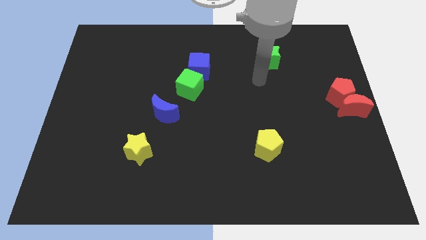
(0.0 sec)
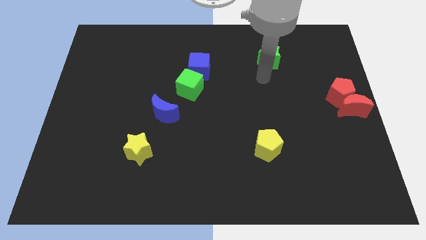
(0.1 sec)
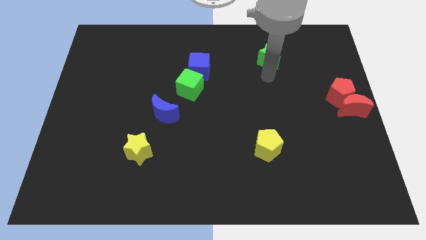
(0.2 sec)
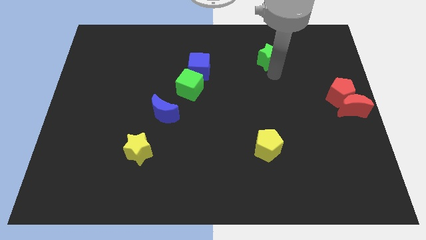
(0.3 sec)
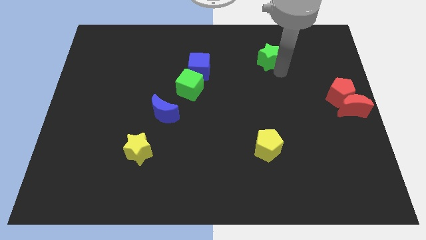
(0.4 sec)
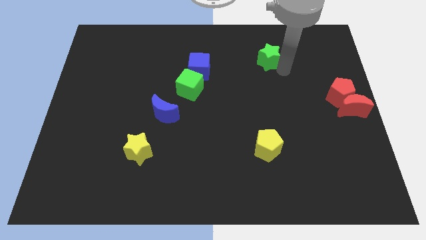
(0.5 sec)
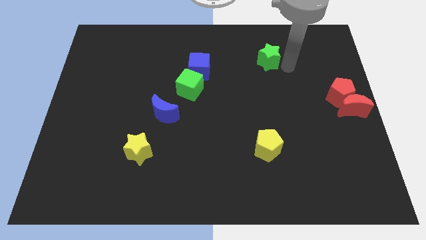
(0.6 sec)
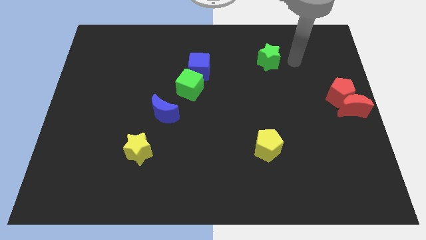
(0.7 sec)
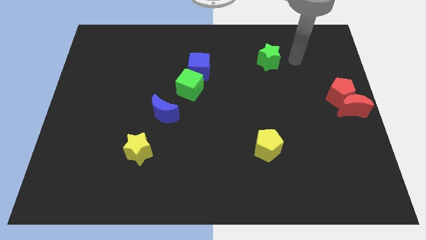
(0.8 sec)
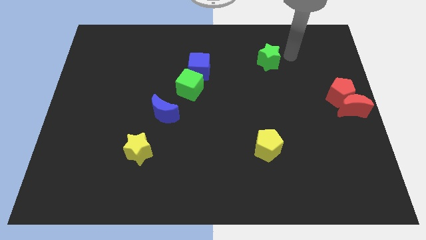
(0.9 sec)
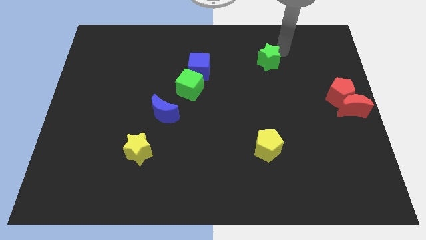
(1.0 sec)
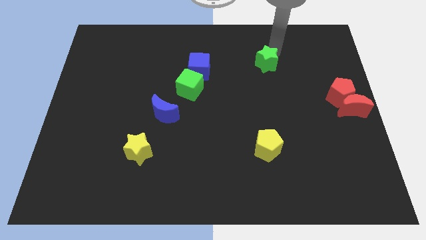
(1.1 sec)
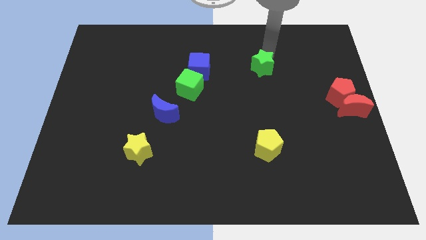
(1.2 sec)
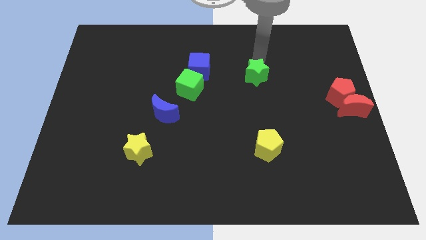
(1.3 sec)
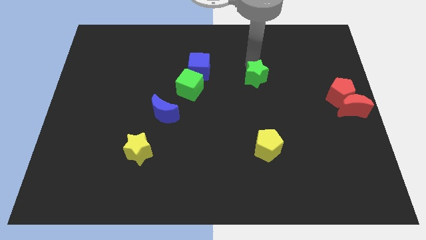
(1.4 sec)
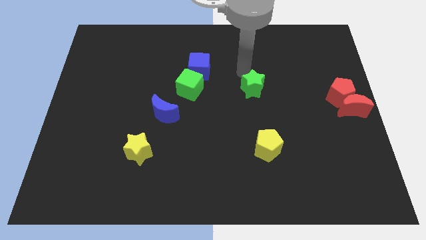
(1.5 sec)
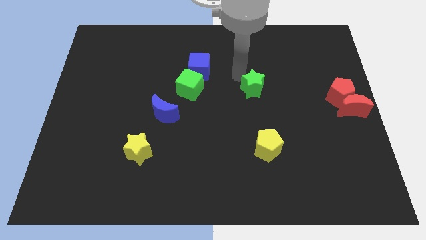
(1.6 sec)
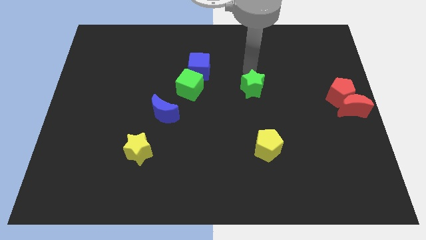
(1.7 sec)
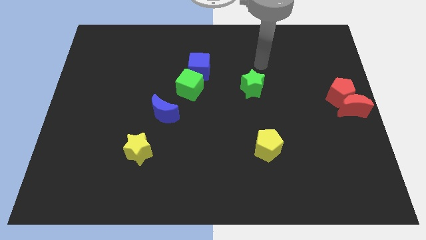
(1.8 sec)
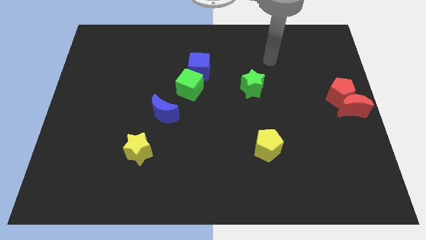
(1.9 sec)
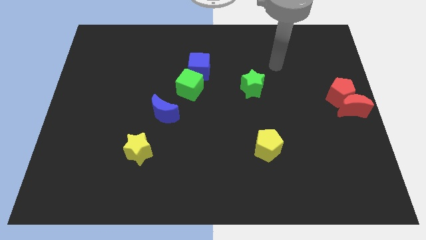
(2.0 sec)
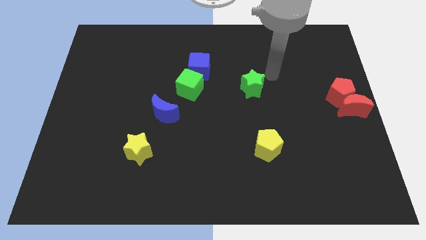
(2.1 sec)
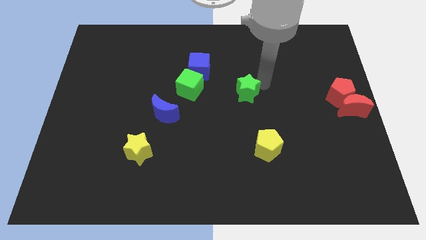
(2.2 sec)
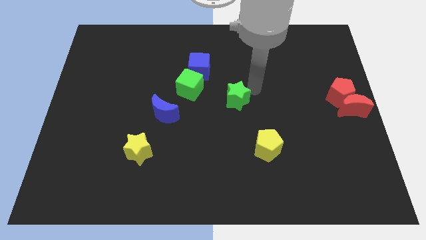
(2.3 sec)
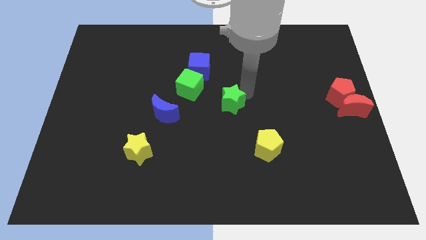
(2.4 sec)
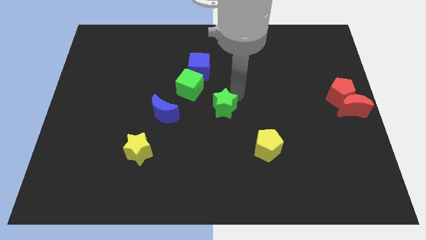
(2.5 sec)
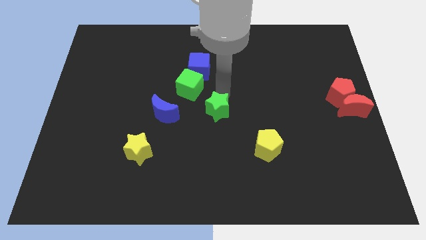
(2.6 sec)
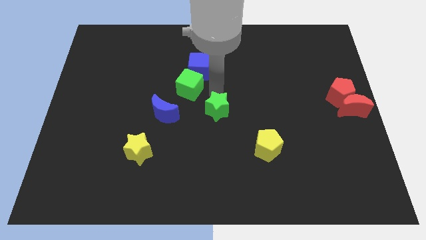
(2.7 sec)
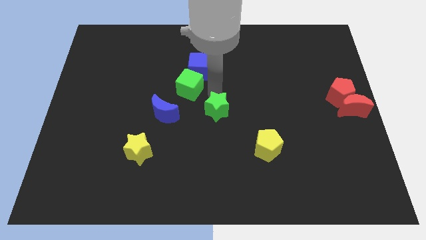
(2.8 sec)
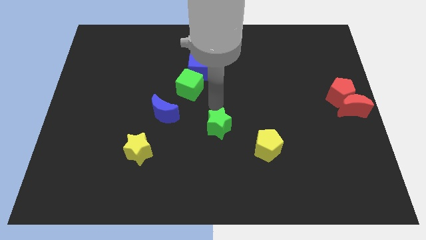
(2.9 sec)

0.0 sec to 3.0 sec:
push green star diagonally in between green cube and yellow pentagon

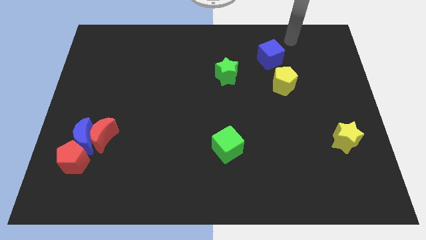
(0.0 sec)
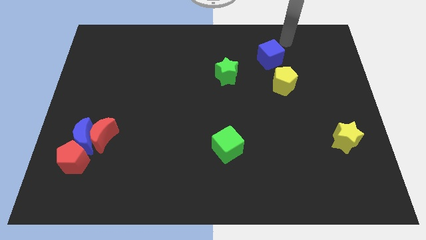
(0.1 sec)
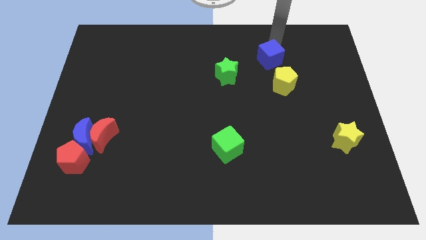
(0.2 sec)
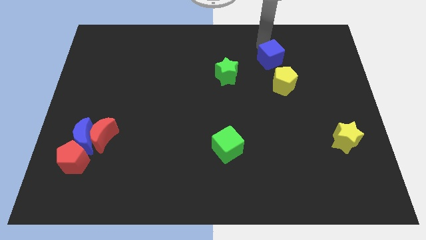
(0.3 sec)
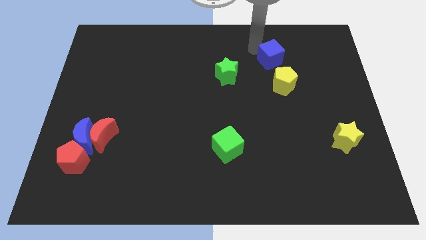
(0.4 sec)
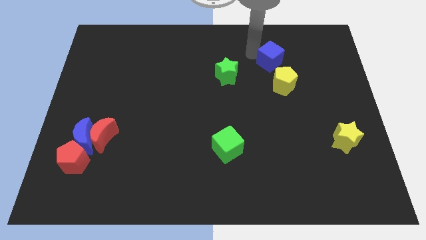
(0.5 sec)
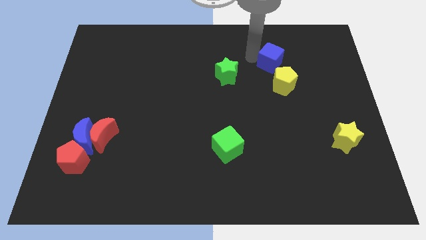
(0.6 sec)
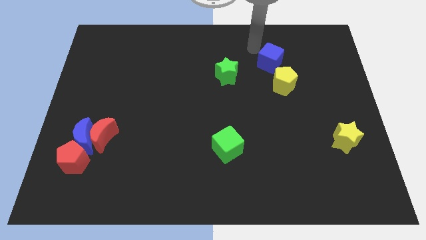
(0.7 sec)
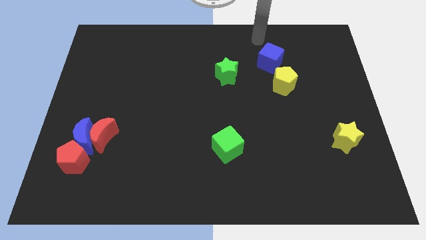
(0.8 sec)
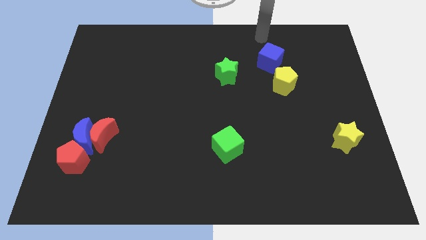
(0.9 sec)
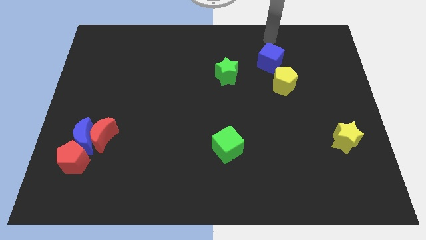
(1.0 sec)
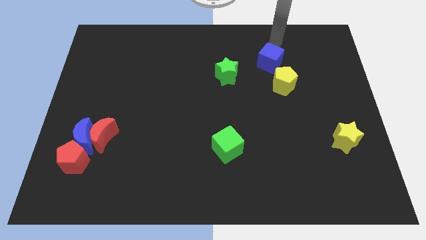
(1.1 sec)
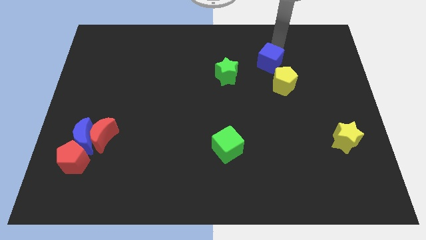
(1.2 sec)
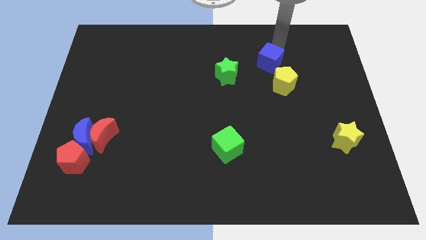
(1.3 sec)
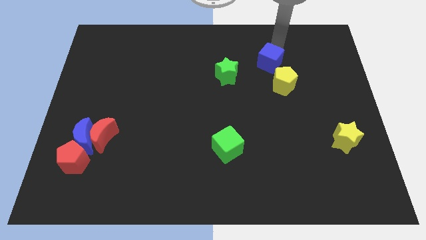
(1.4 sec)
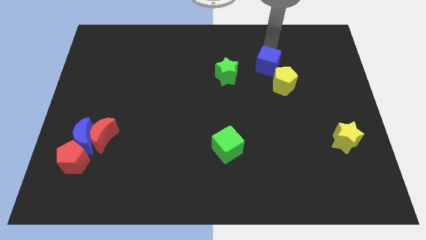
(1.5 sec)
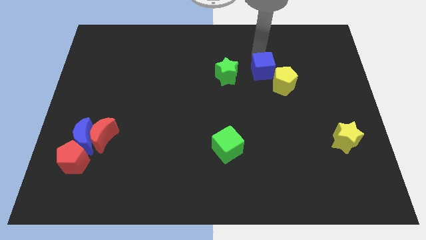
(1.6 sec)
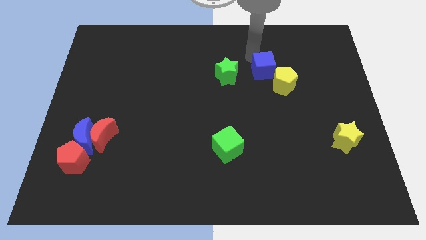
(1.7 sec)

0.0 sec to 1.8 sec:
move the blue cube to the top left side of the yellow pentagon

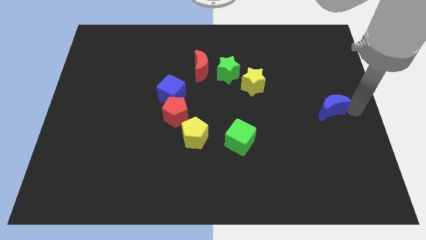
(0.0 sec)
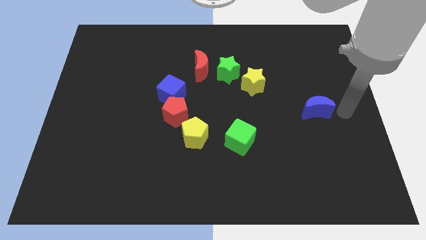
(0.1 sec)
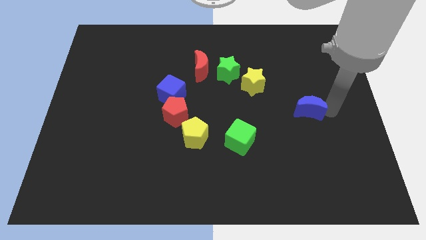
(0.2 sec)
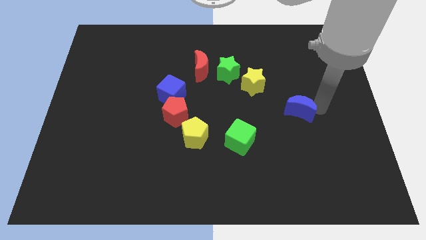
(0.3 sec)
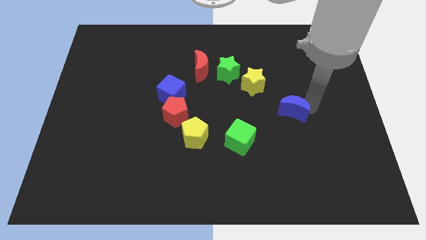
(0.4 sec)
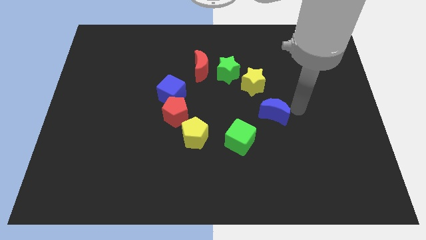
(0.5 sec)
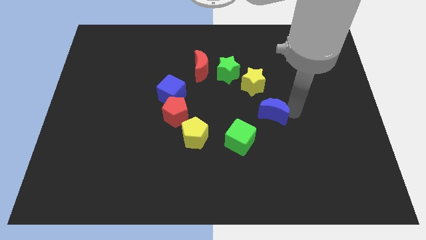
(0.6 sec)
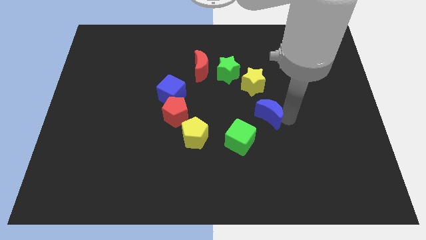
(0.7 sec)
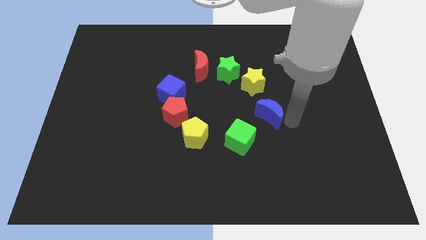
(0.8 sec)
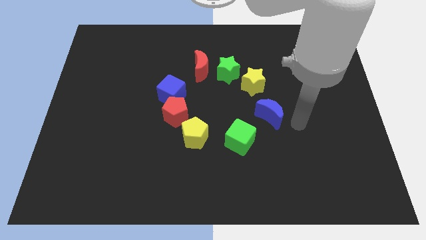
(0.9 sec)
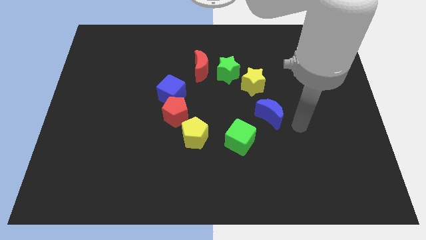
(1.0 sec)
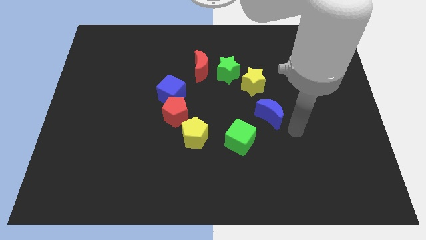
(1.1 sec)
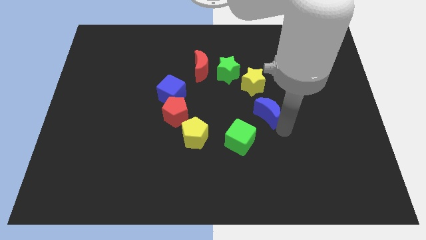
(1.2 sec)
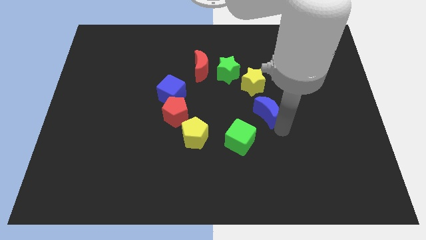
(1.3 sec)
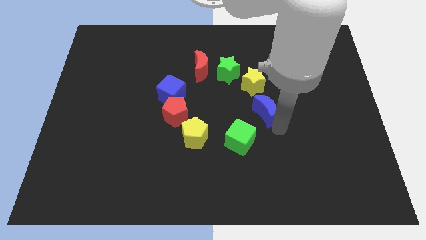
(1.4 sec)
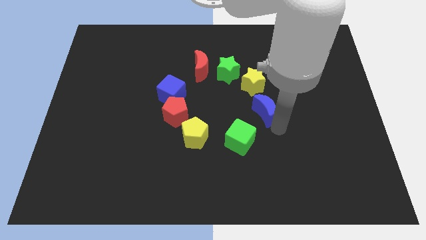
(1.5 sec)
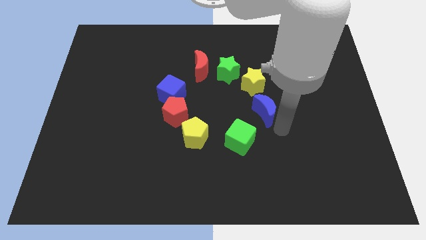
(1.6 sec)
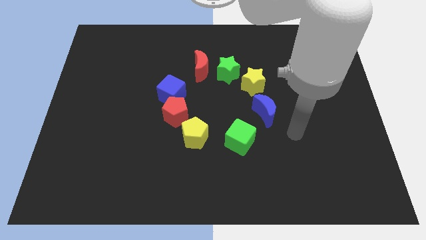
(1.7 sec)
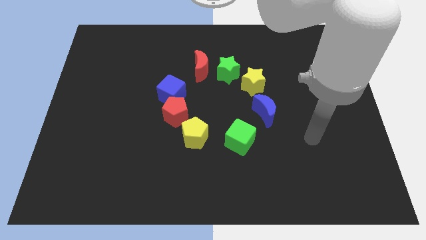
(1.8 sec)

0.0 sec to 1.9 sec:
slide the blue moon close to the yellow star

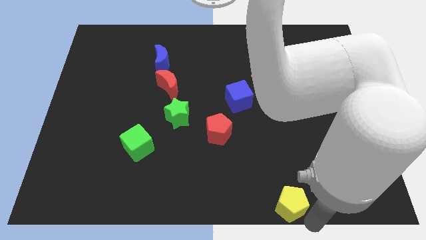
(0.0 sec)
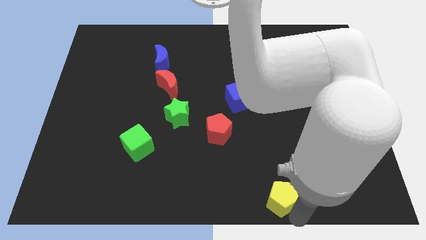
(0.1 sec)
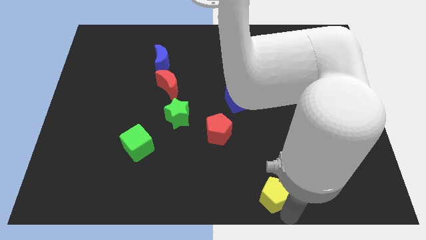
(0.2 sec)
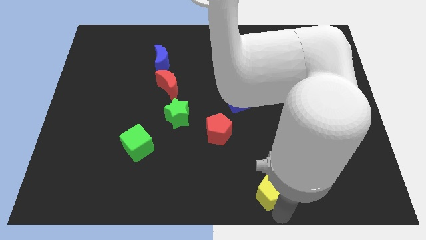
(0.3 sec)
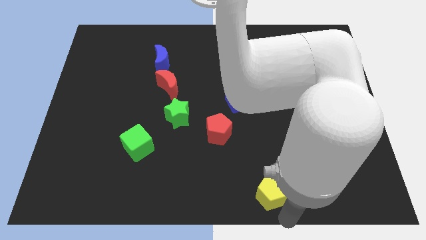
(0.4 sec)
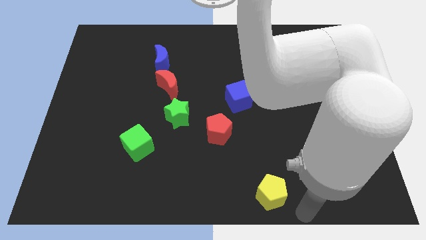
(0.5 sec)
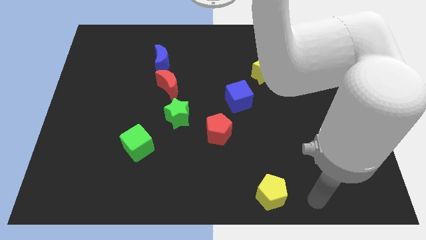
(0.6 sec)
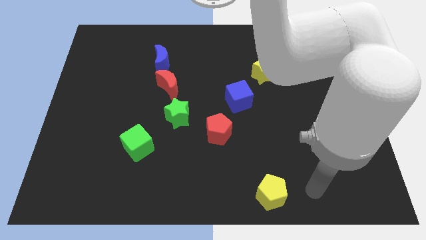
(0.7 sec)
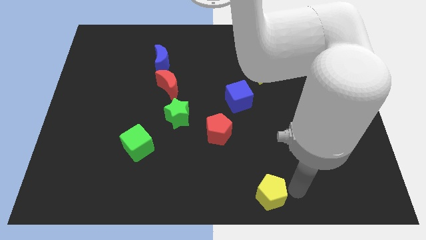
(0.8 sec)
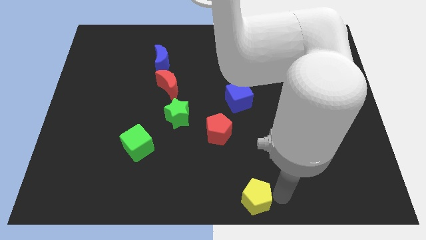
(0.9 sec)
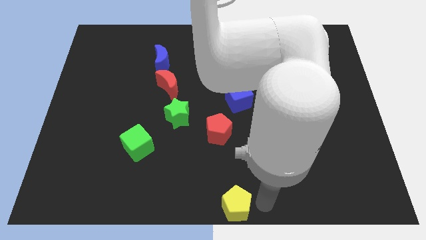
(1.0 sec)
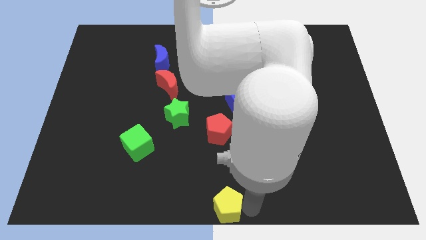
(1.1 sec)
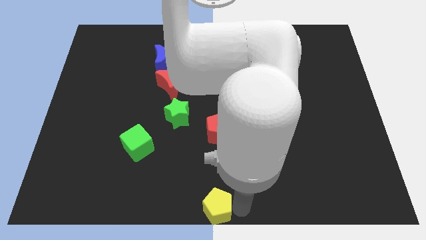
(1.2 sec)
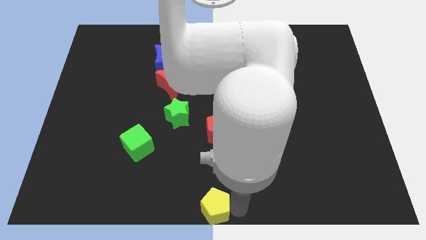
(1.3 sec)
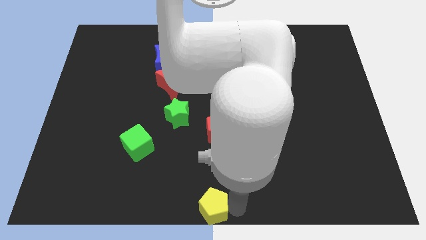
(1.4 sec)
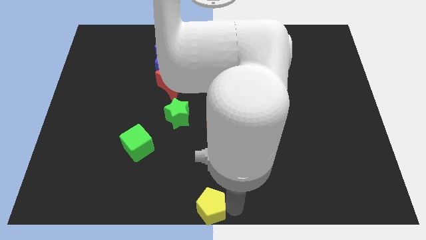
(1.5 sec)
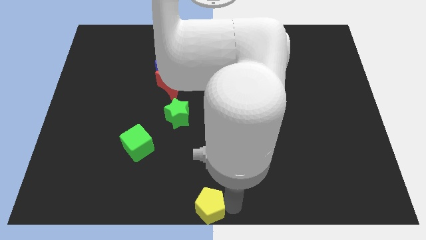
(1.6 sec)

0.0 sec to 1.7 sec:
move the yellow pentagon to the bottom center

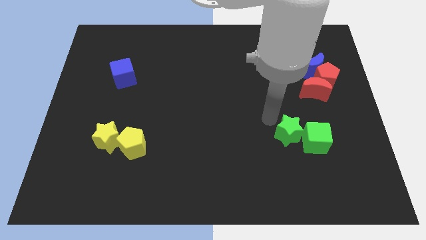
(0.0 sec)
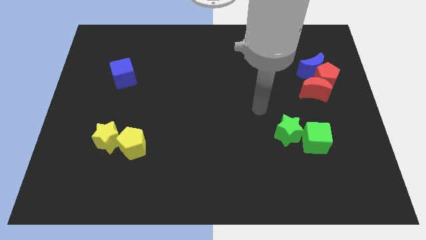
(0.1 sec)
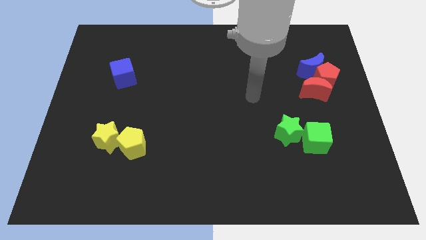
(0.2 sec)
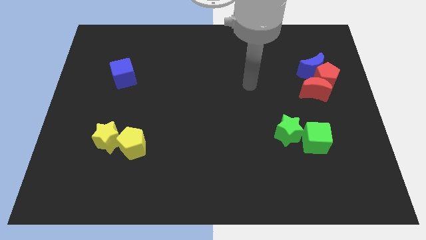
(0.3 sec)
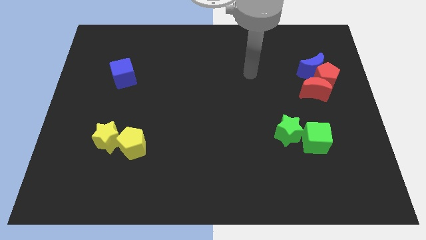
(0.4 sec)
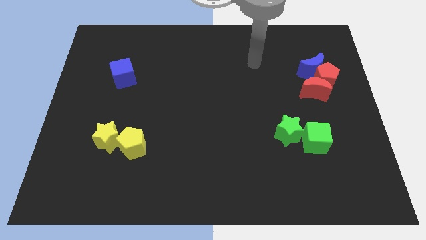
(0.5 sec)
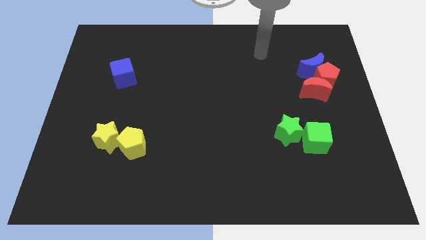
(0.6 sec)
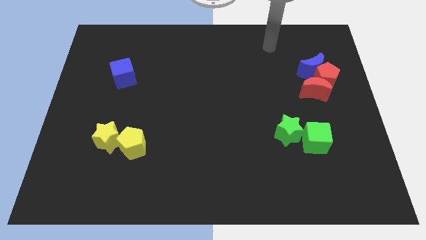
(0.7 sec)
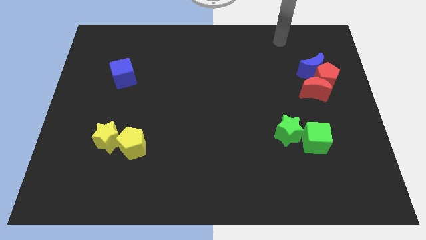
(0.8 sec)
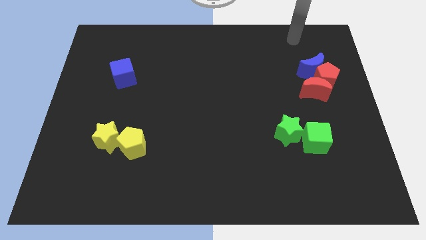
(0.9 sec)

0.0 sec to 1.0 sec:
go away from the green star
